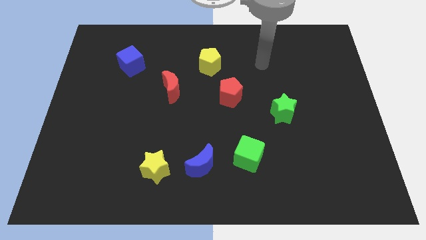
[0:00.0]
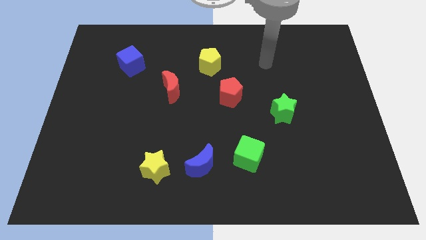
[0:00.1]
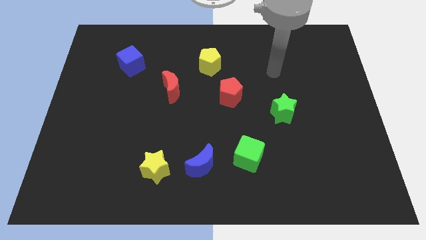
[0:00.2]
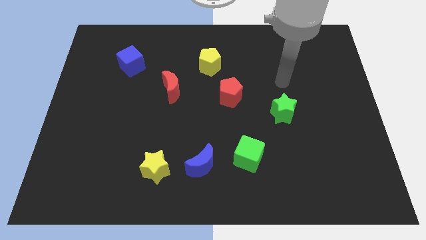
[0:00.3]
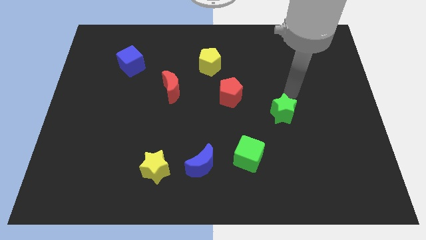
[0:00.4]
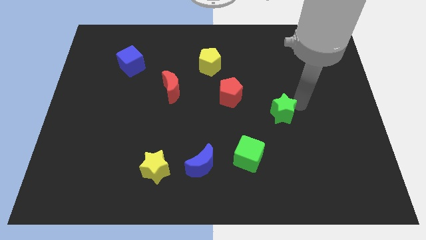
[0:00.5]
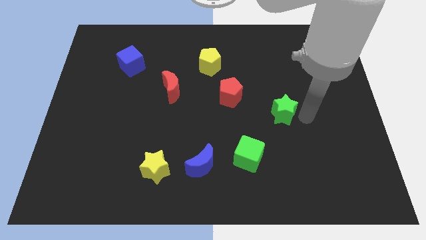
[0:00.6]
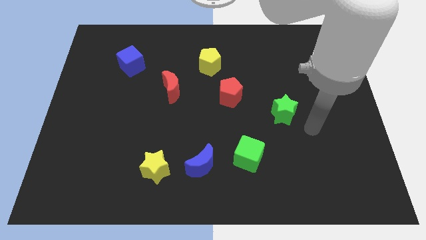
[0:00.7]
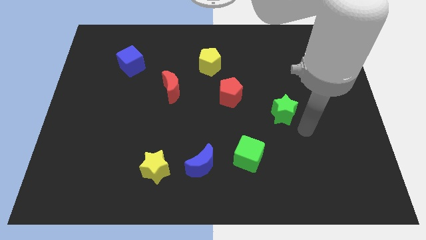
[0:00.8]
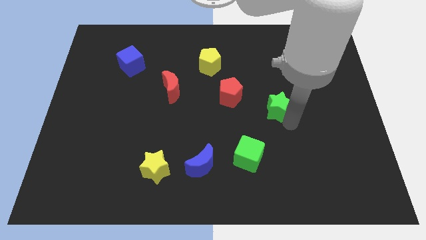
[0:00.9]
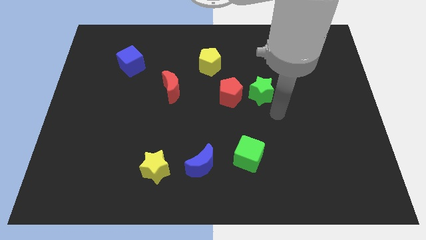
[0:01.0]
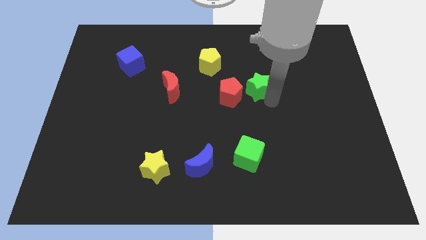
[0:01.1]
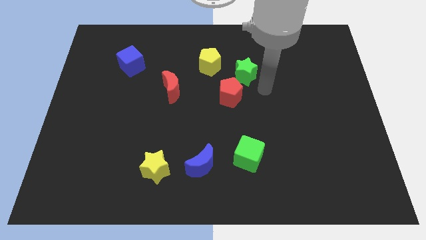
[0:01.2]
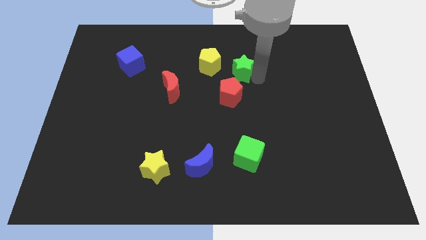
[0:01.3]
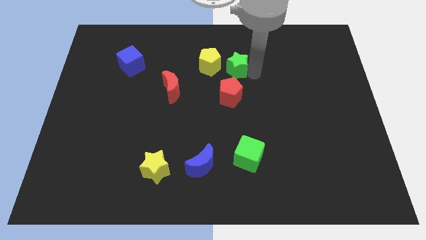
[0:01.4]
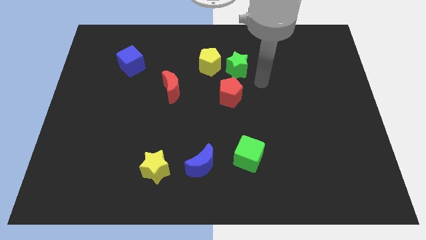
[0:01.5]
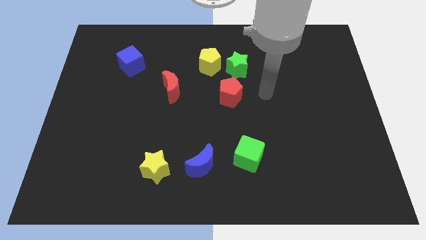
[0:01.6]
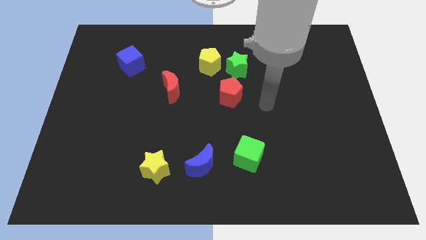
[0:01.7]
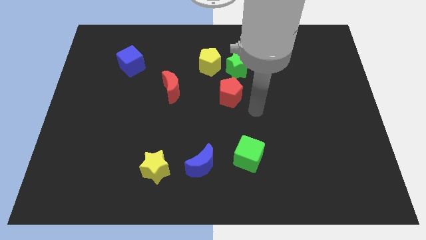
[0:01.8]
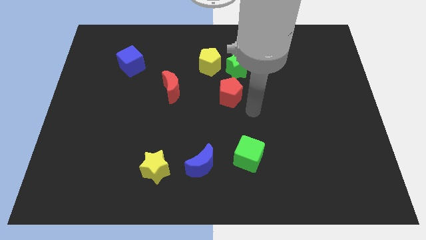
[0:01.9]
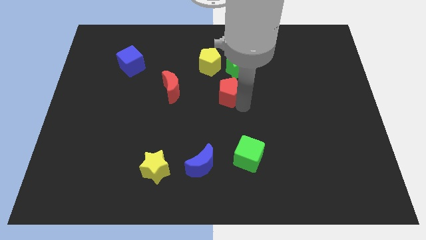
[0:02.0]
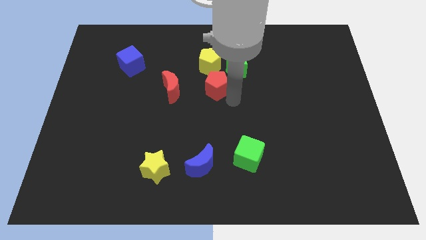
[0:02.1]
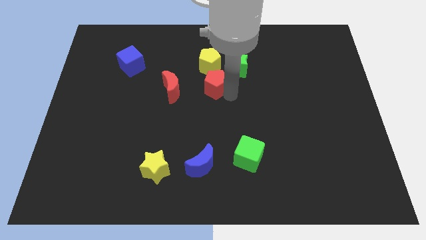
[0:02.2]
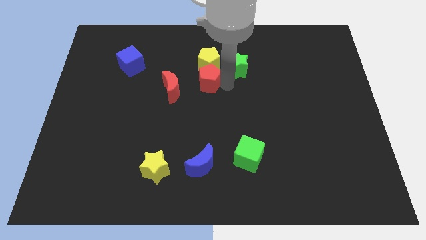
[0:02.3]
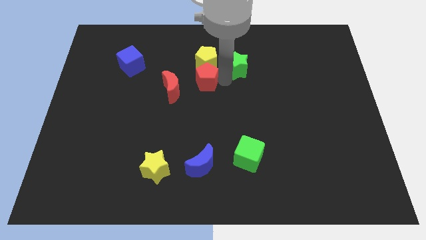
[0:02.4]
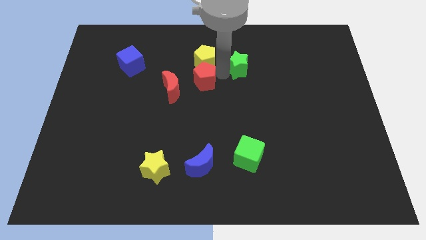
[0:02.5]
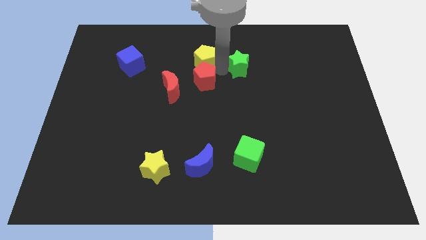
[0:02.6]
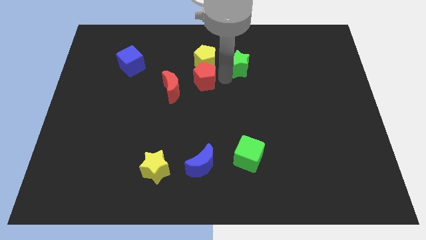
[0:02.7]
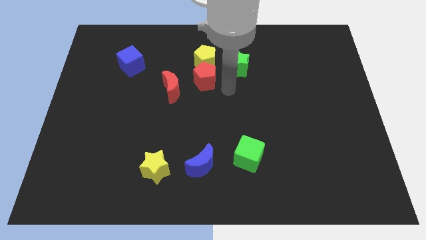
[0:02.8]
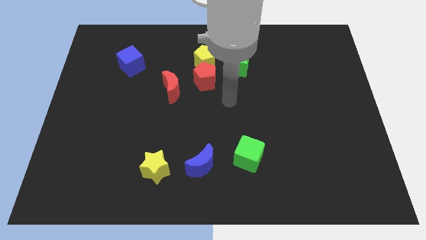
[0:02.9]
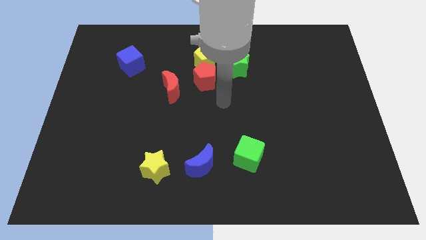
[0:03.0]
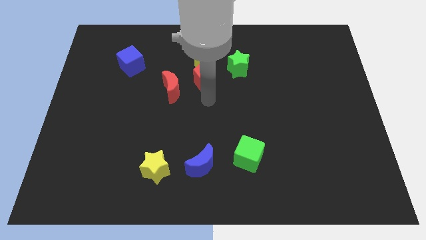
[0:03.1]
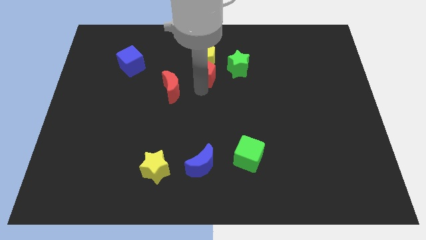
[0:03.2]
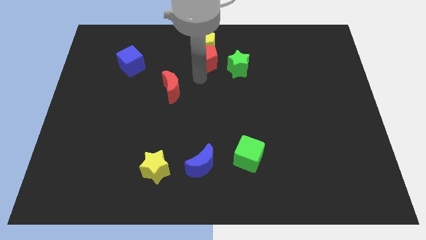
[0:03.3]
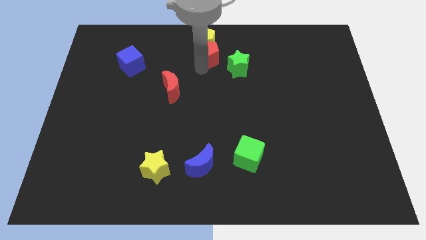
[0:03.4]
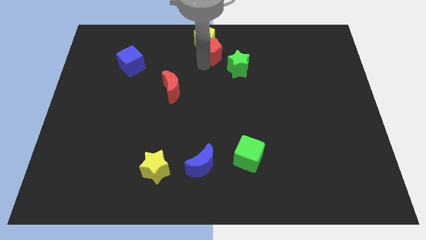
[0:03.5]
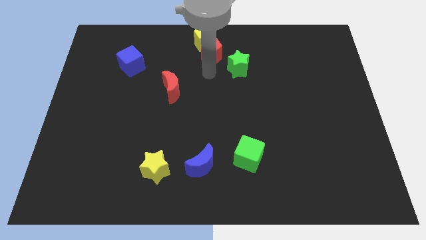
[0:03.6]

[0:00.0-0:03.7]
move the green star and the red crescent towards the top of the board

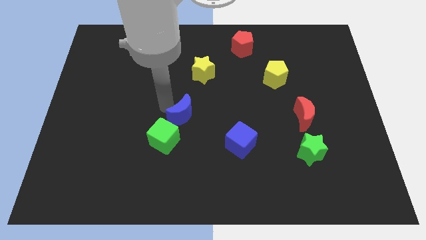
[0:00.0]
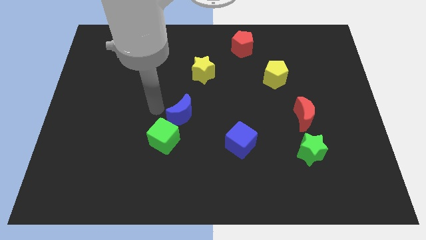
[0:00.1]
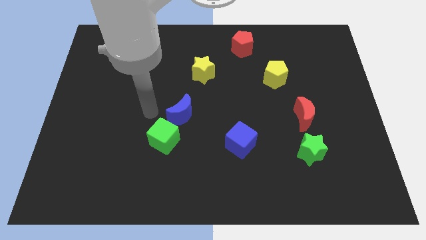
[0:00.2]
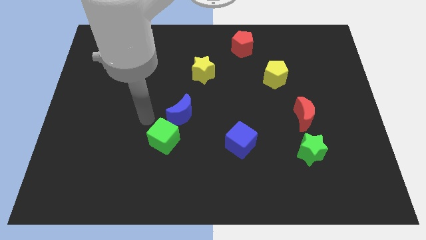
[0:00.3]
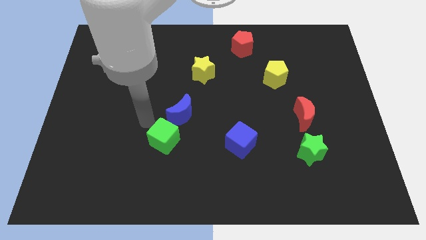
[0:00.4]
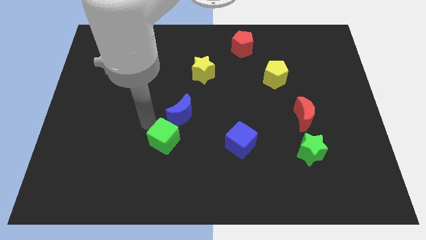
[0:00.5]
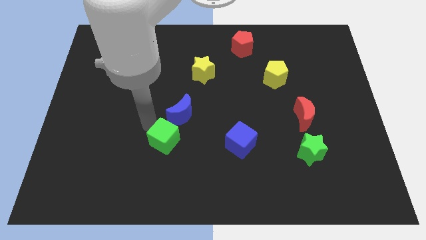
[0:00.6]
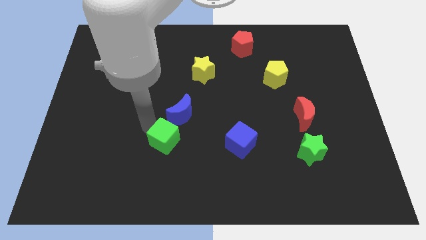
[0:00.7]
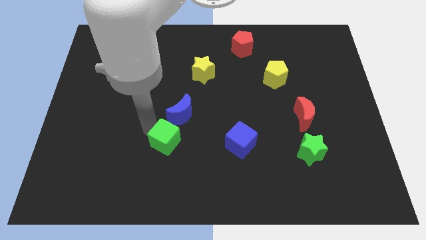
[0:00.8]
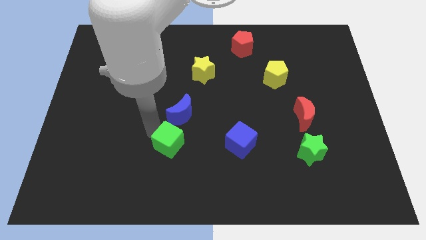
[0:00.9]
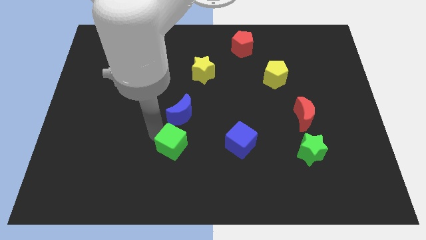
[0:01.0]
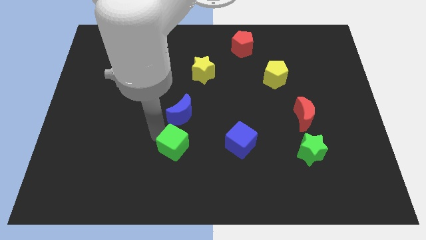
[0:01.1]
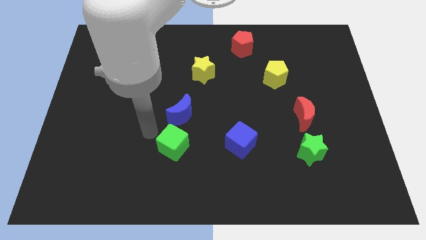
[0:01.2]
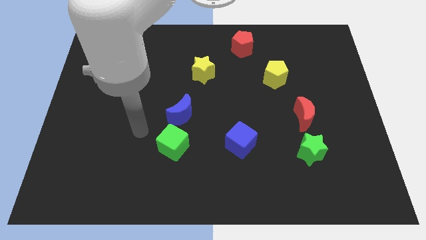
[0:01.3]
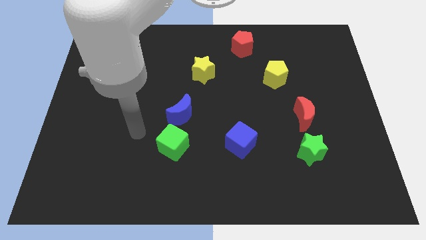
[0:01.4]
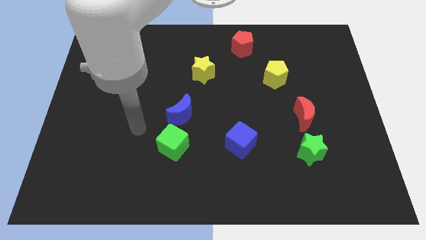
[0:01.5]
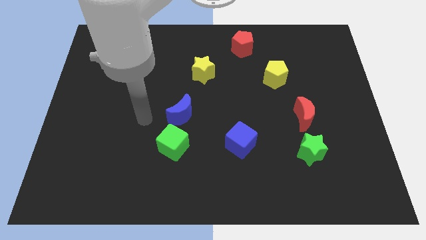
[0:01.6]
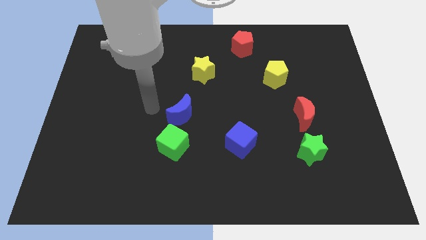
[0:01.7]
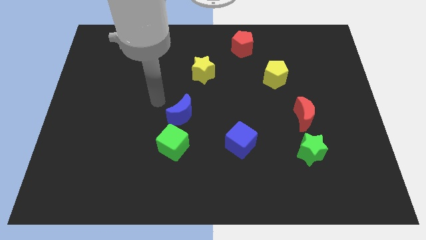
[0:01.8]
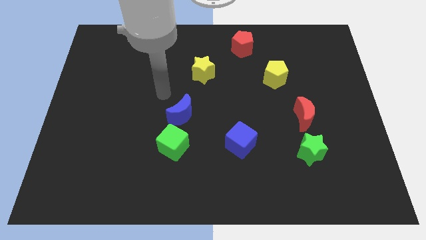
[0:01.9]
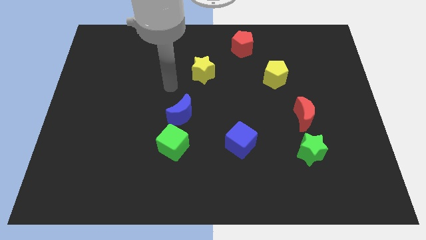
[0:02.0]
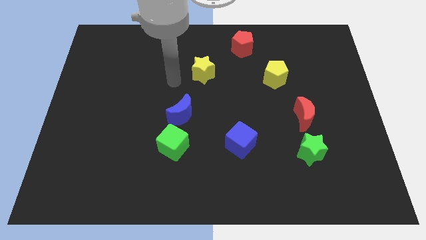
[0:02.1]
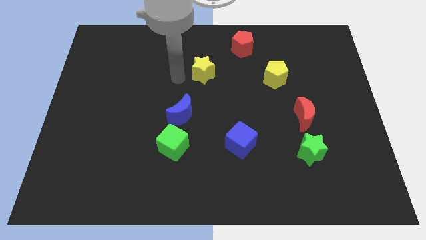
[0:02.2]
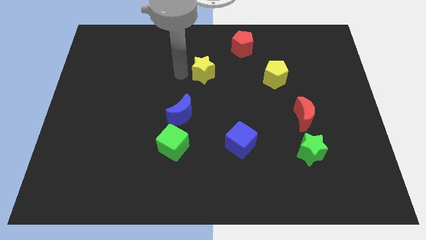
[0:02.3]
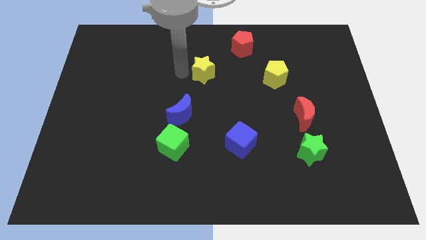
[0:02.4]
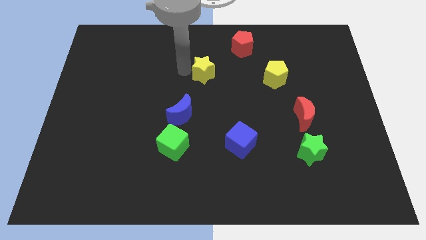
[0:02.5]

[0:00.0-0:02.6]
slightly move green cube to the center

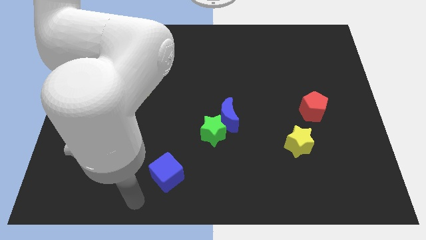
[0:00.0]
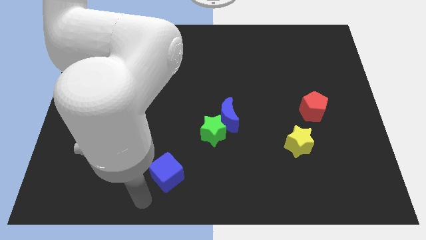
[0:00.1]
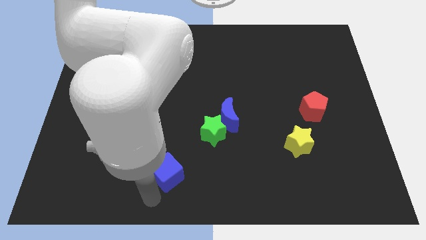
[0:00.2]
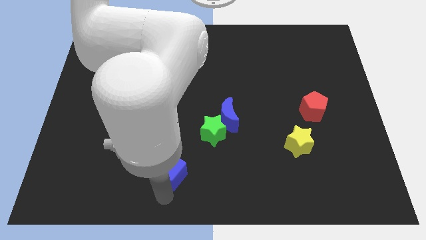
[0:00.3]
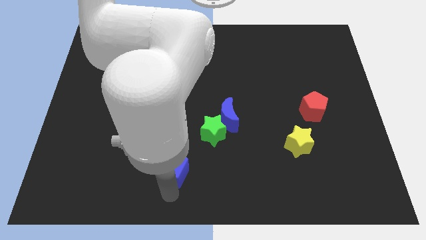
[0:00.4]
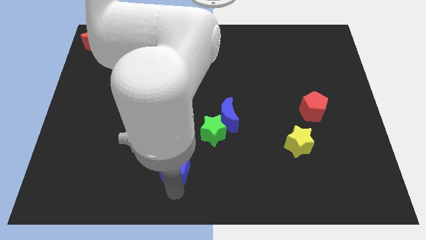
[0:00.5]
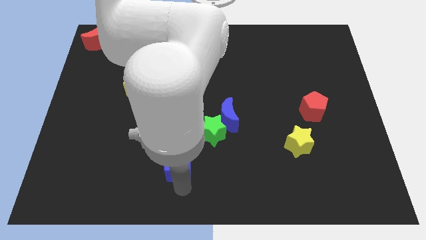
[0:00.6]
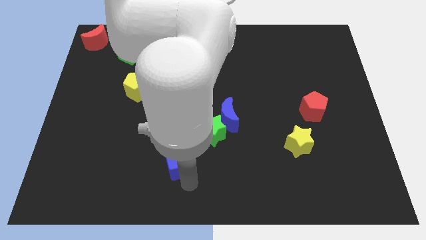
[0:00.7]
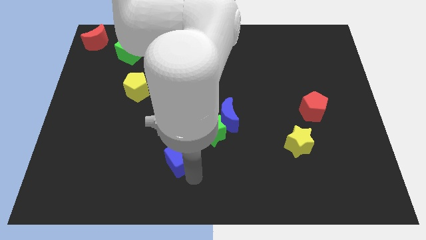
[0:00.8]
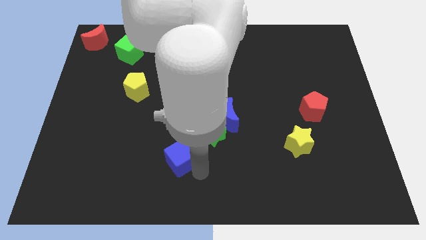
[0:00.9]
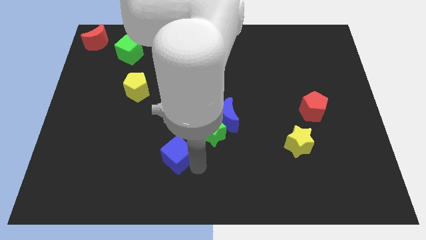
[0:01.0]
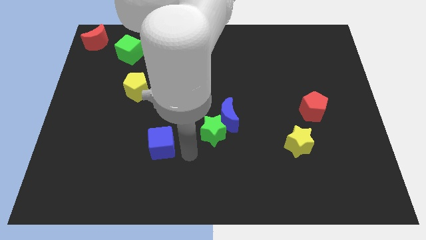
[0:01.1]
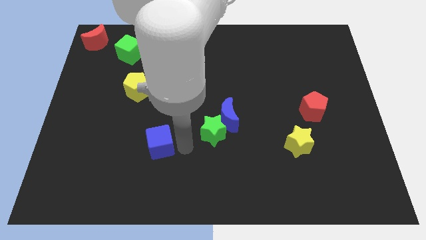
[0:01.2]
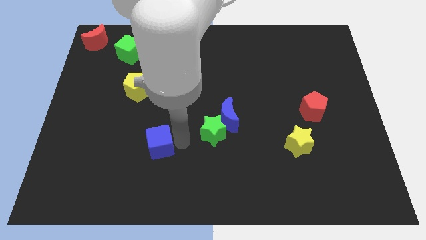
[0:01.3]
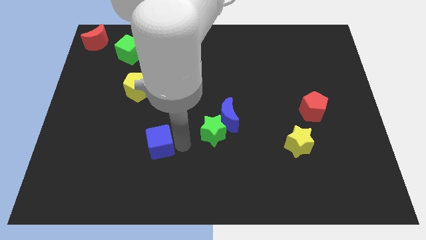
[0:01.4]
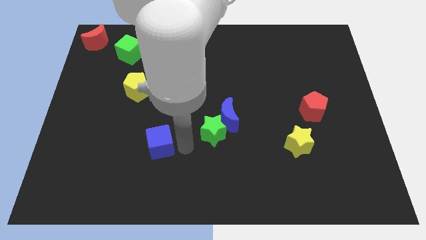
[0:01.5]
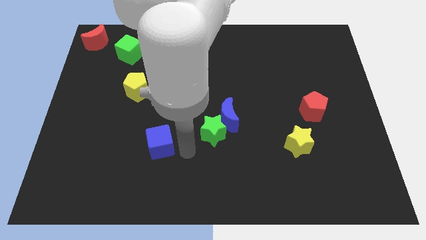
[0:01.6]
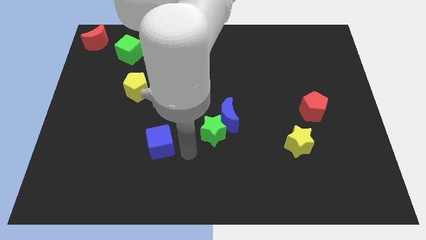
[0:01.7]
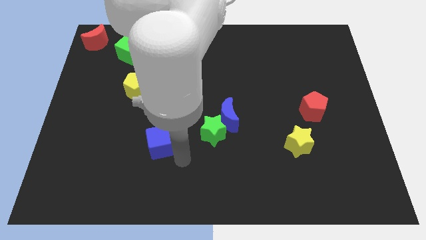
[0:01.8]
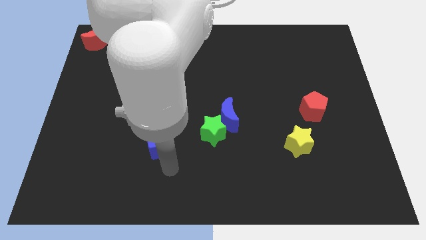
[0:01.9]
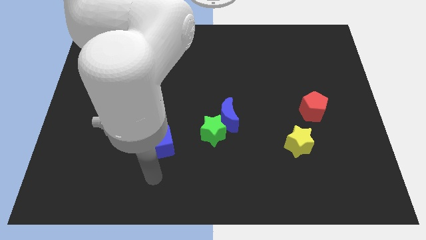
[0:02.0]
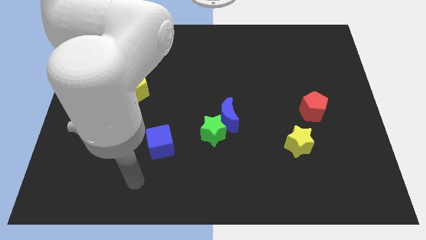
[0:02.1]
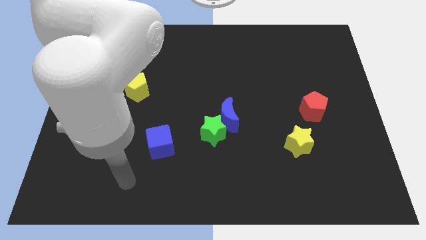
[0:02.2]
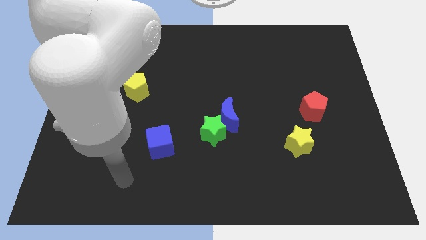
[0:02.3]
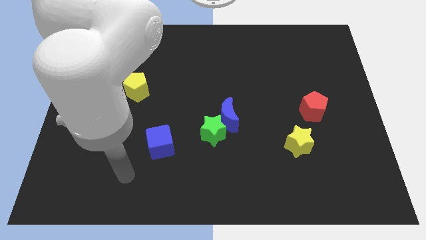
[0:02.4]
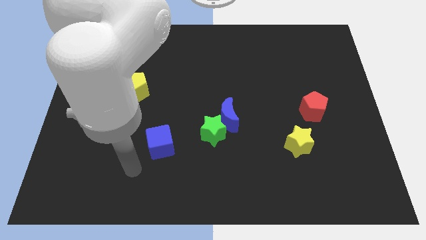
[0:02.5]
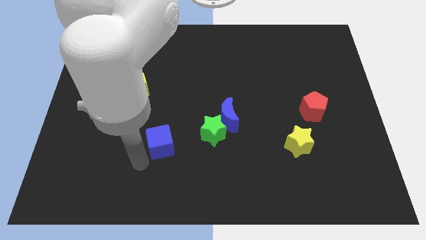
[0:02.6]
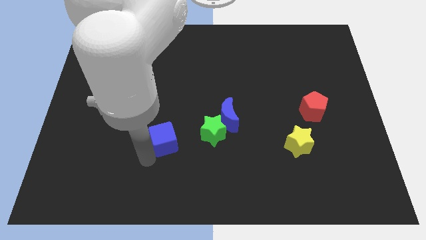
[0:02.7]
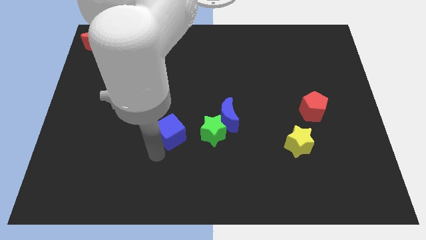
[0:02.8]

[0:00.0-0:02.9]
move the blue cube to the left of the green star
